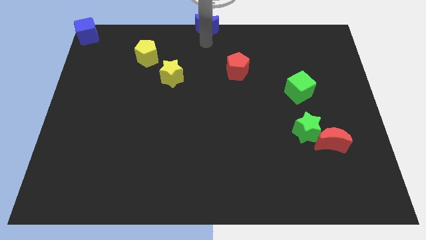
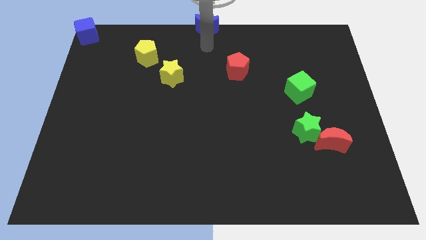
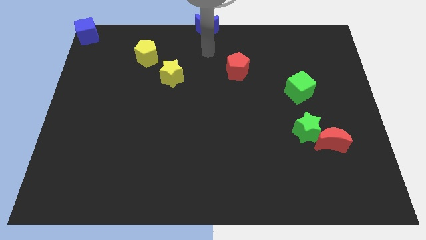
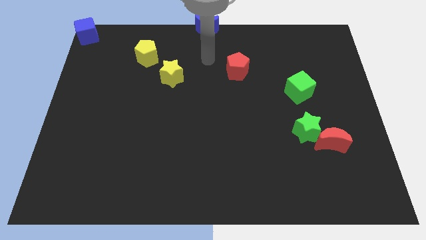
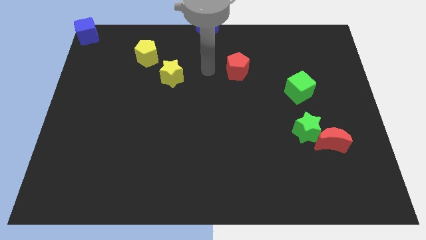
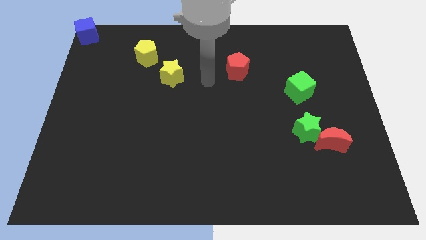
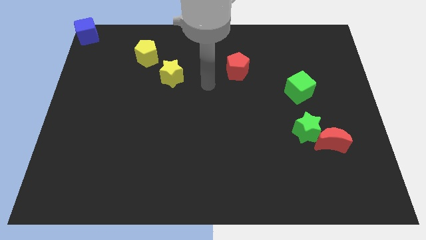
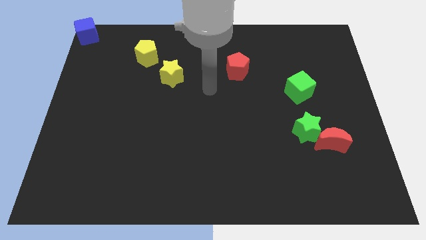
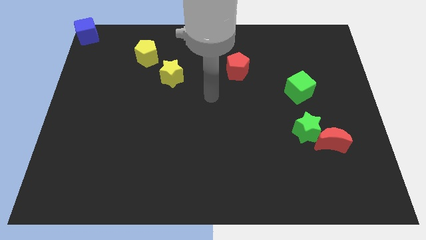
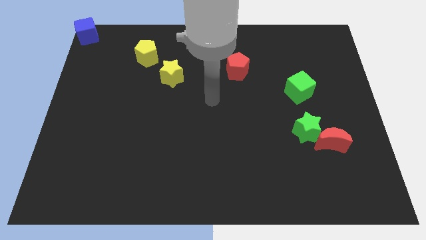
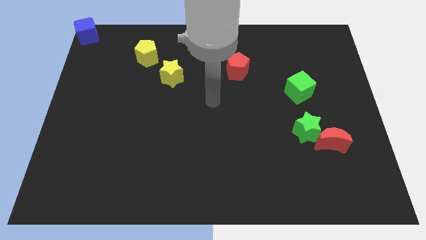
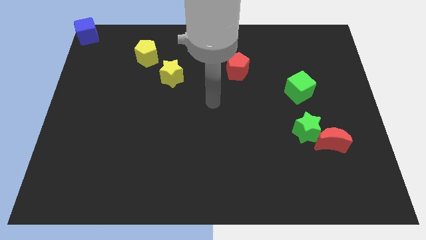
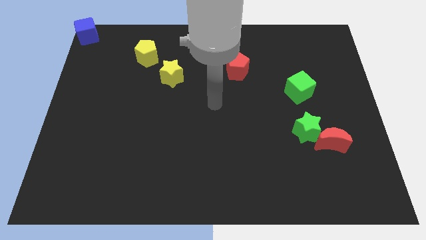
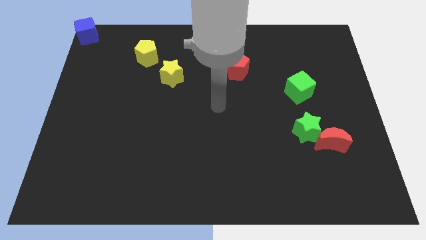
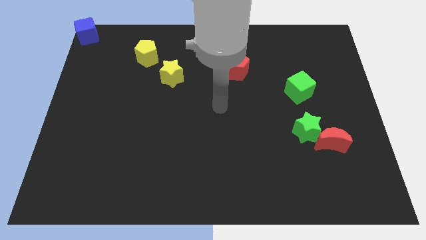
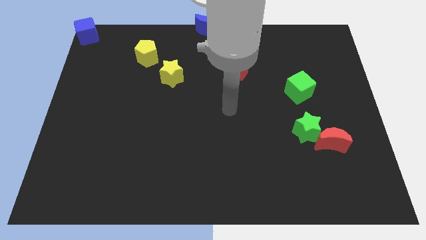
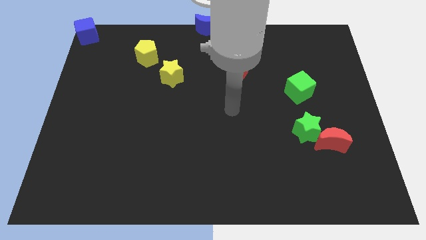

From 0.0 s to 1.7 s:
move the arm away from the blue crescent

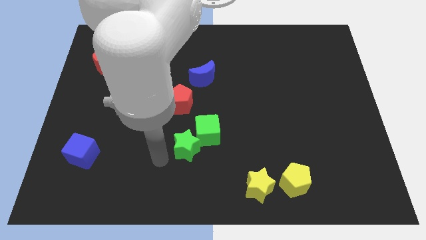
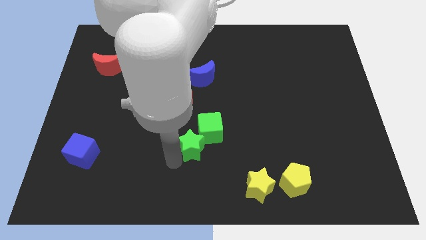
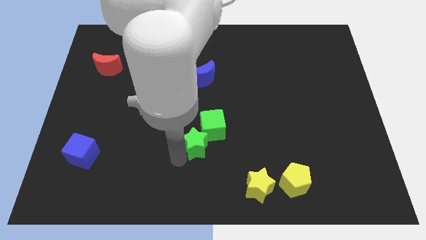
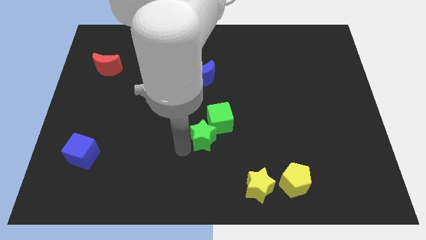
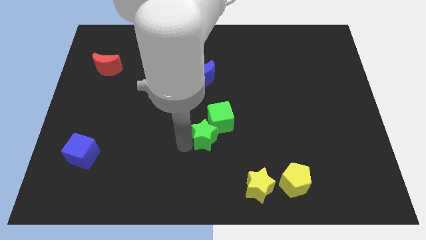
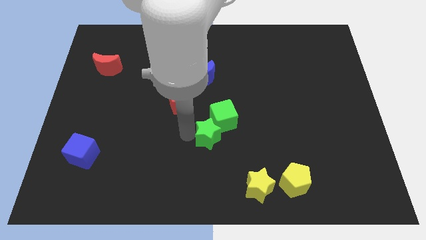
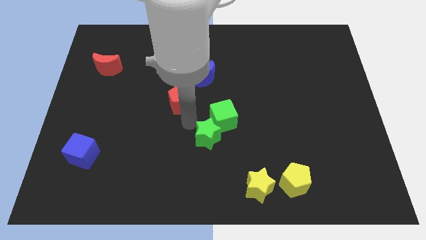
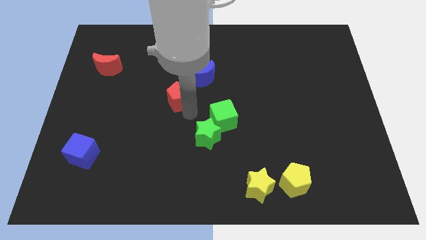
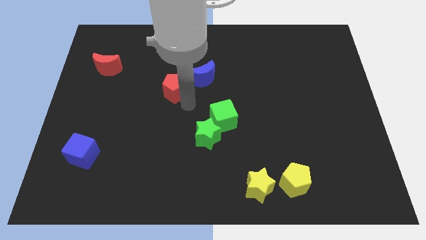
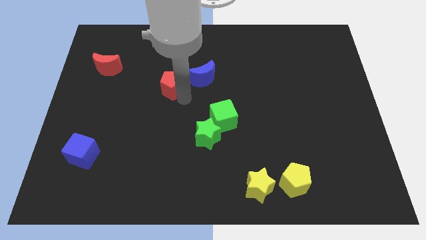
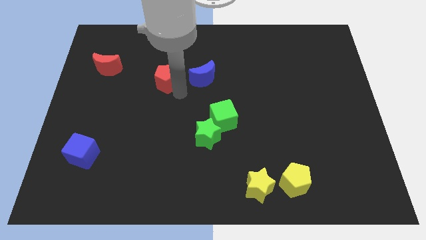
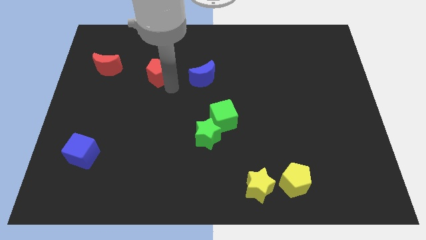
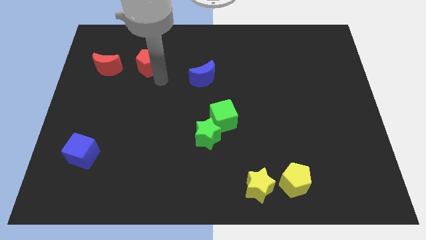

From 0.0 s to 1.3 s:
place red pentagon to the left of the blue moon

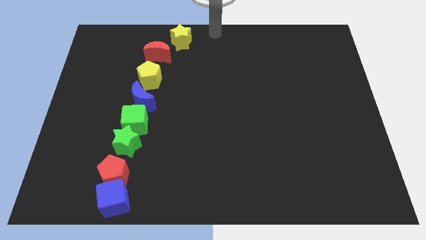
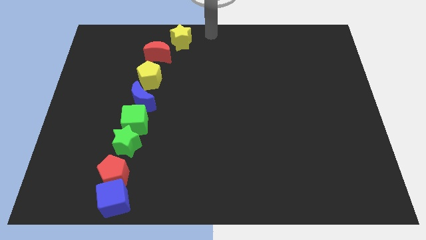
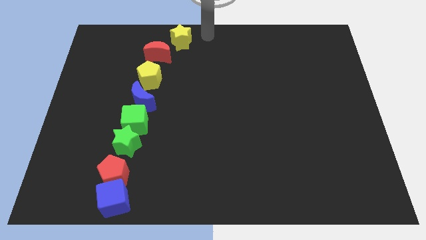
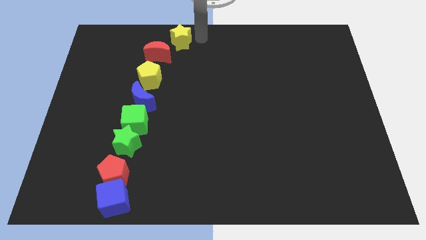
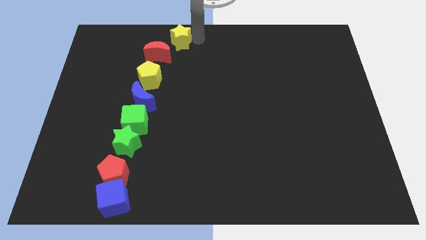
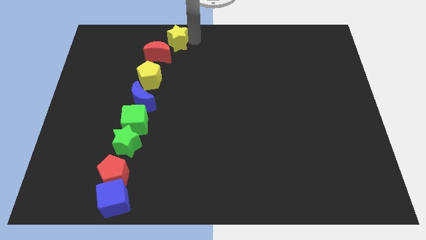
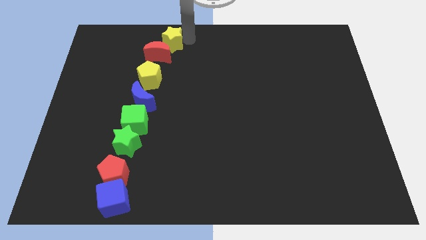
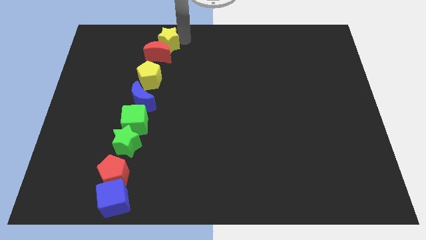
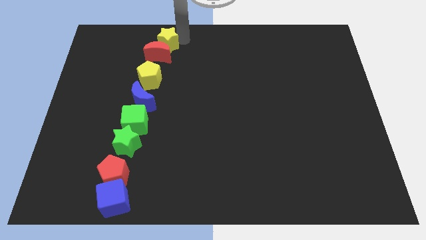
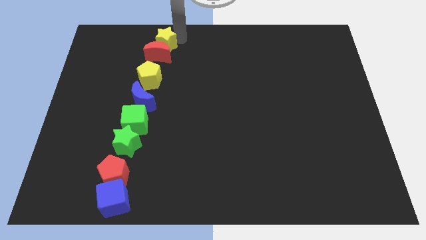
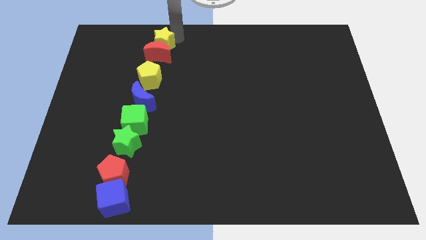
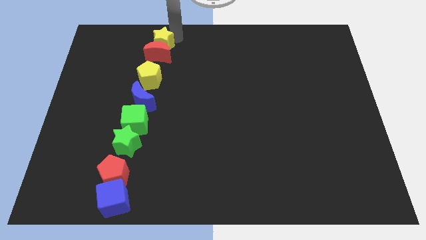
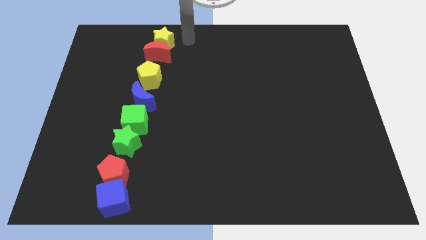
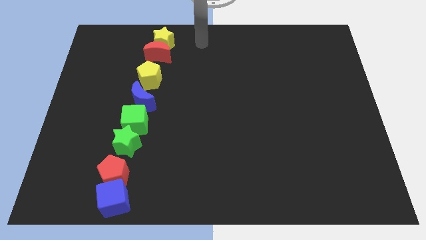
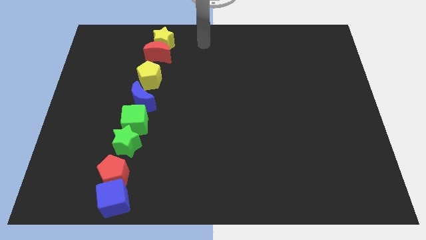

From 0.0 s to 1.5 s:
push the yellow star to the top side of the red crescent

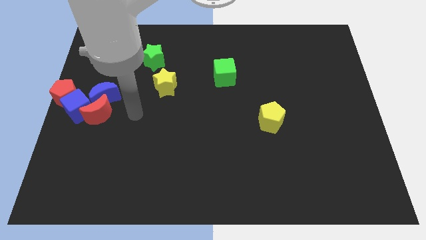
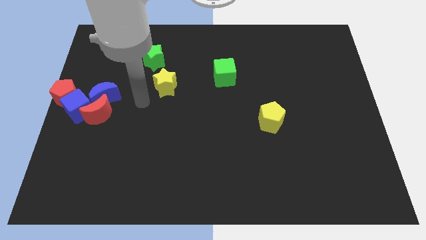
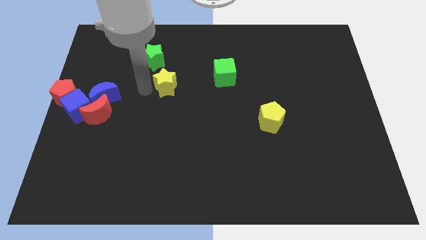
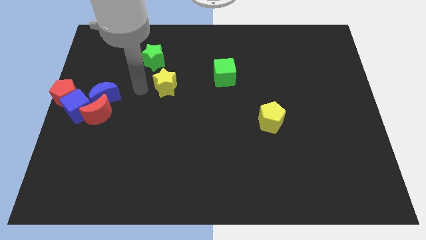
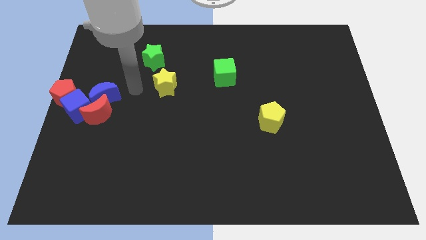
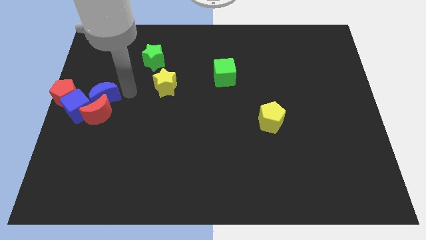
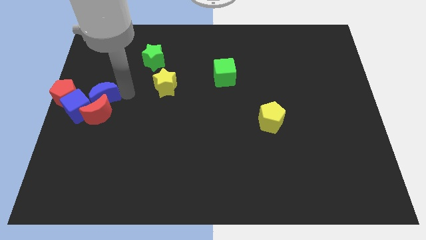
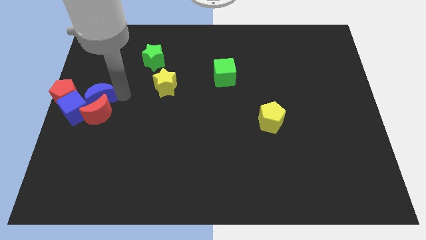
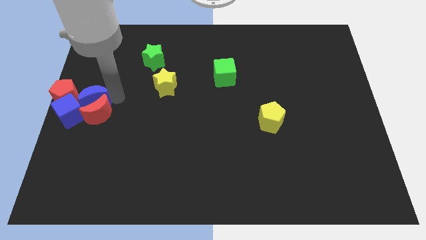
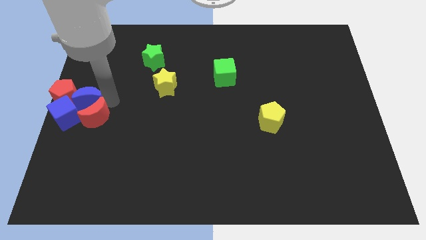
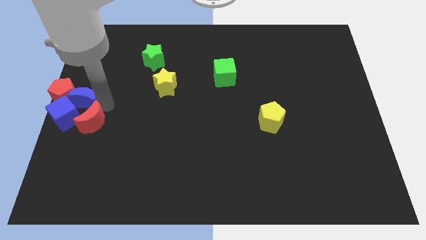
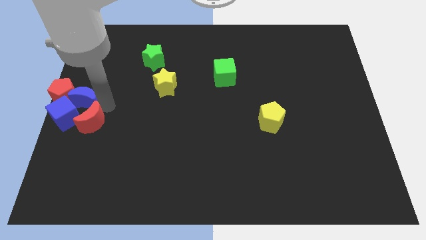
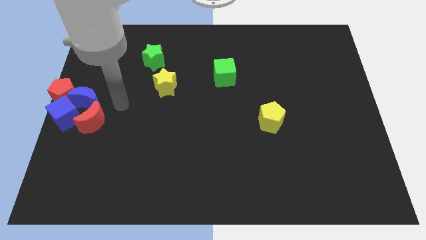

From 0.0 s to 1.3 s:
push the blue moon to the center left

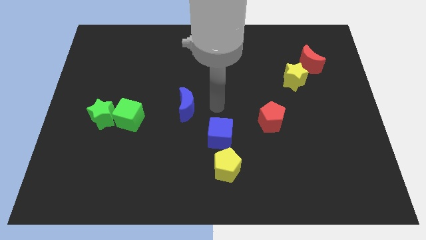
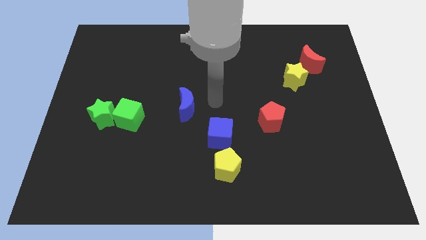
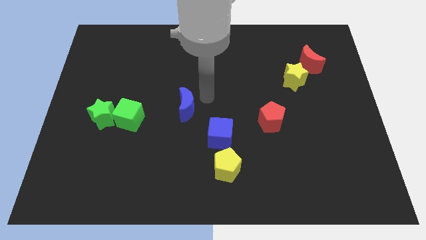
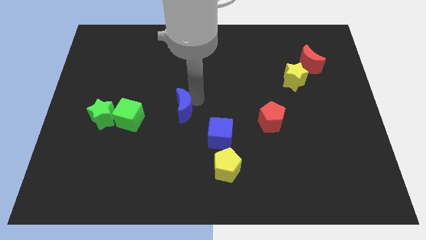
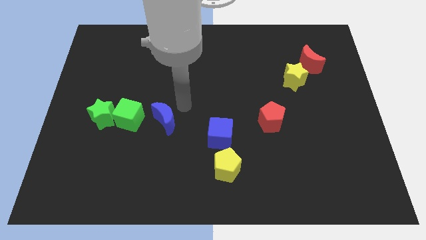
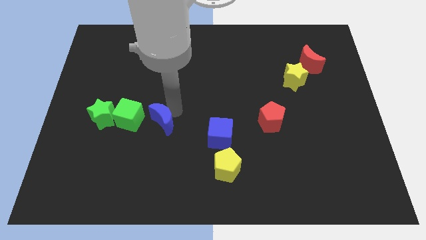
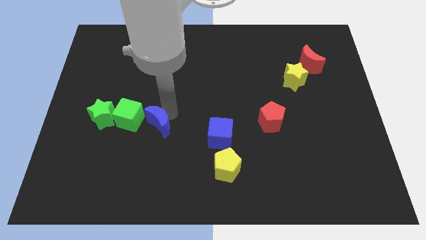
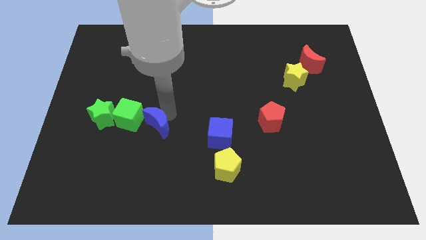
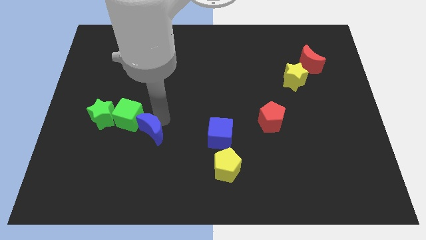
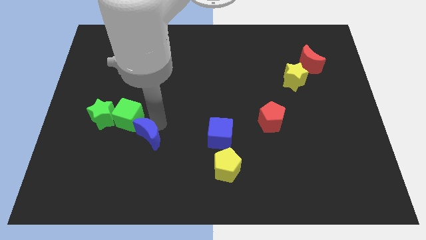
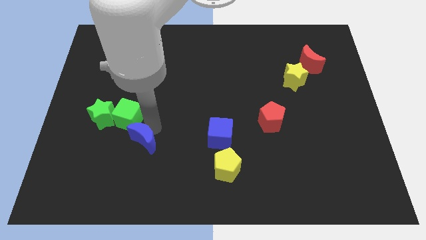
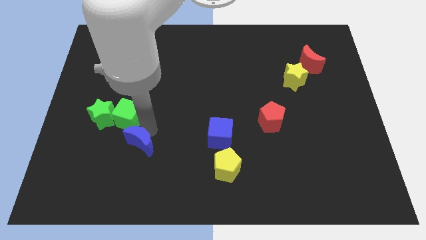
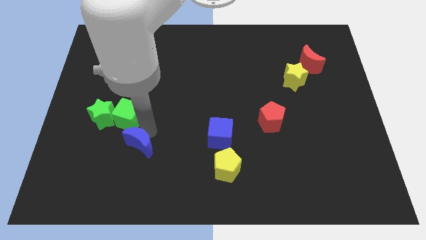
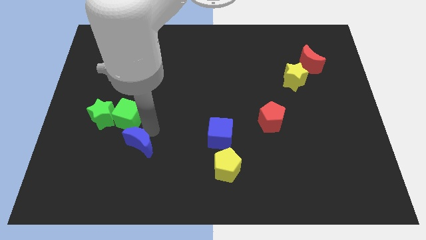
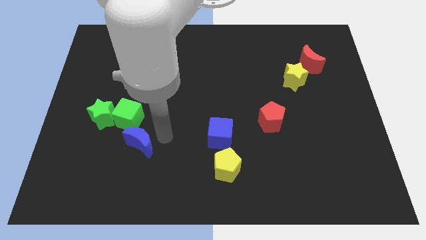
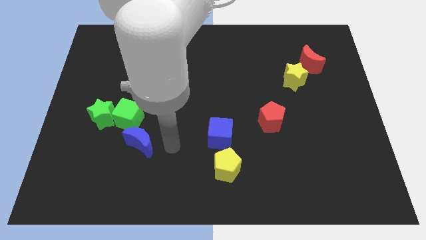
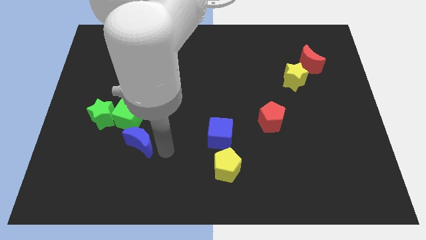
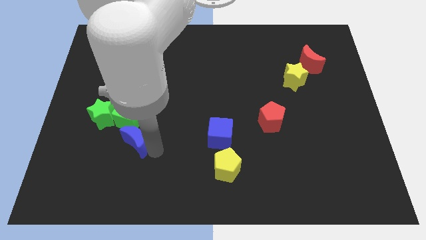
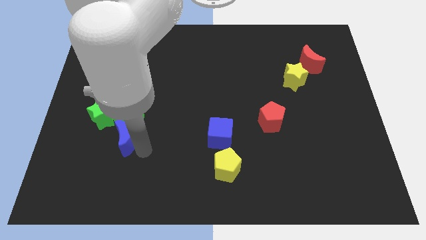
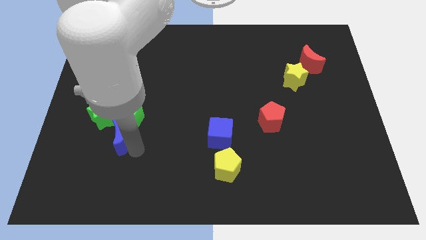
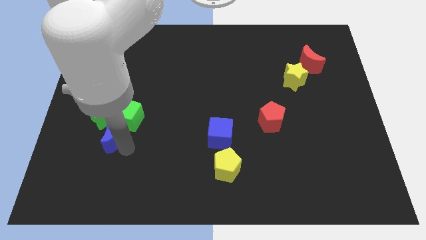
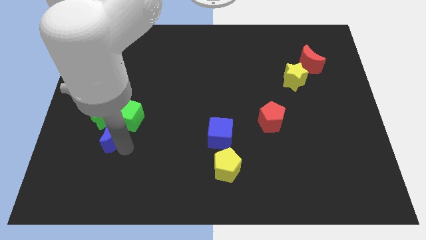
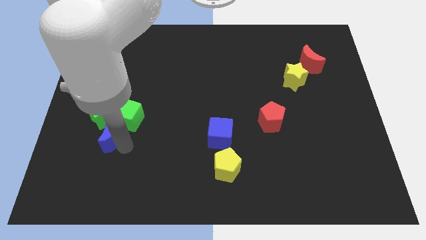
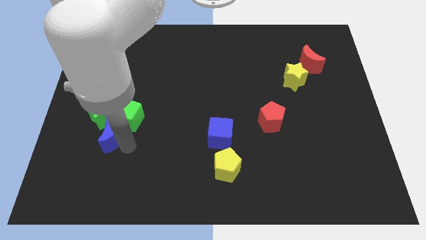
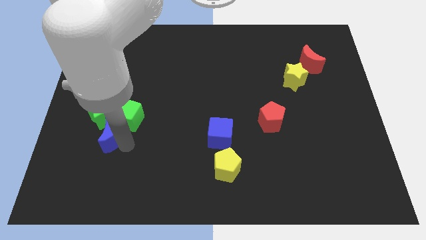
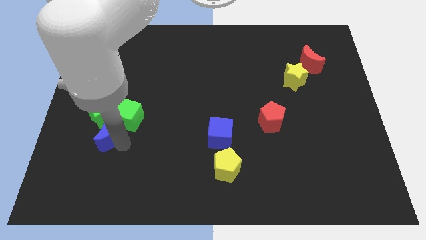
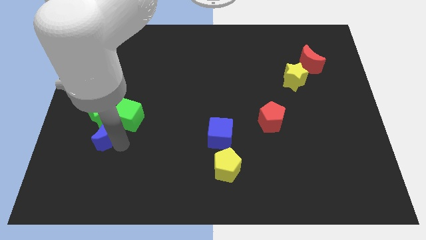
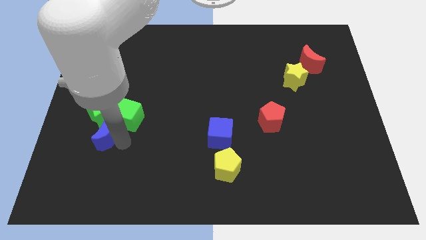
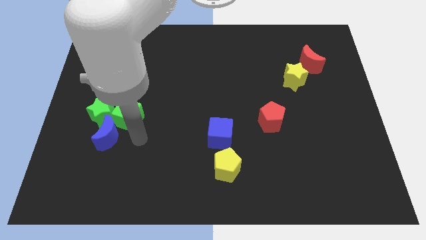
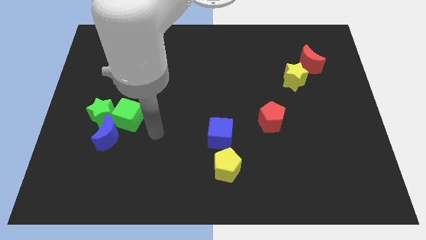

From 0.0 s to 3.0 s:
move the blue crescent to the bottom of the green star
